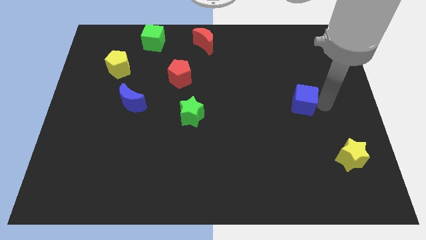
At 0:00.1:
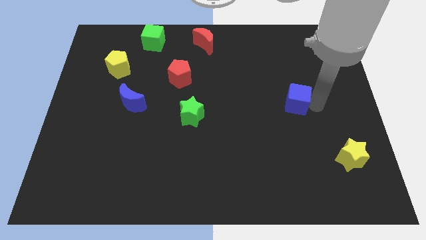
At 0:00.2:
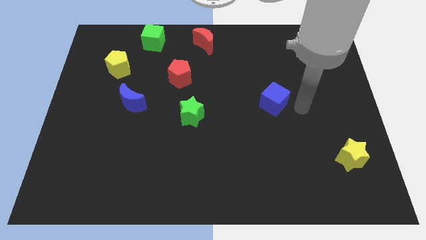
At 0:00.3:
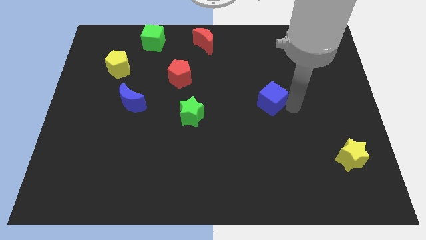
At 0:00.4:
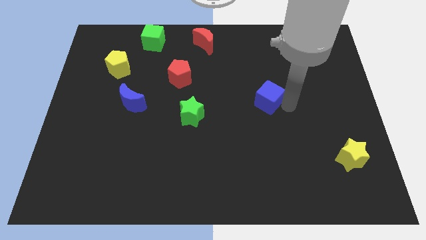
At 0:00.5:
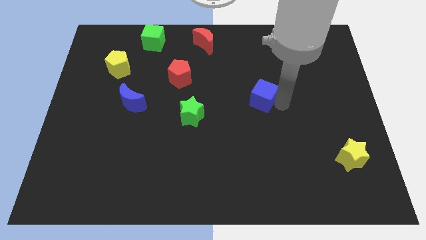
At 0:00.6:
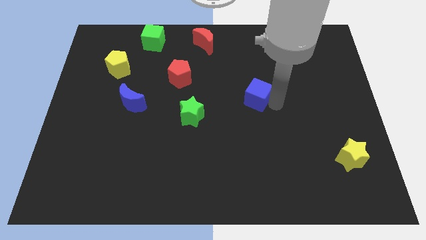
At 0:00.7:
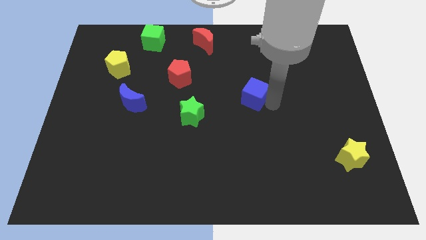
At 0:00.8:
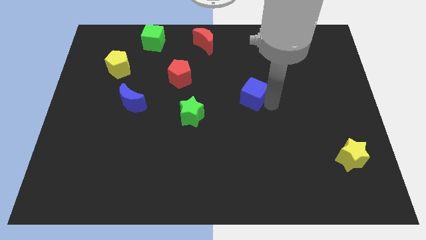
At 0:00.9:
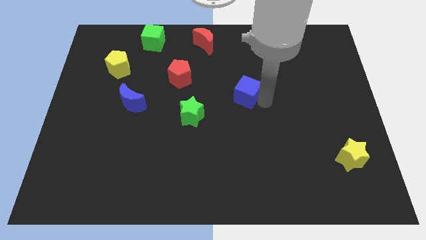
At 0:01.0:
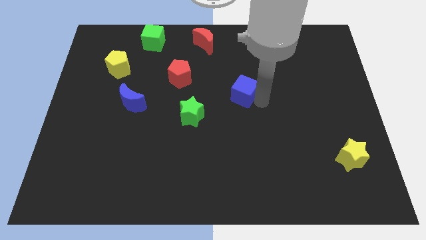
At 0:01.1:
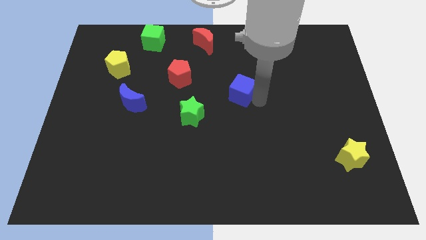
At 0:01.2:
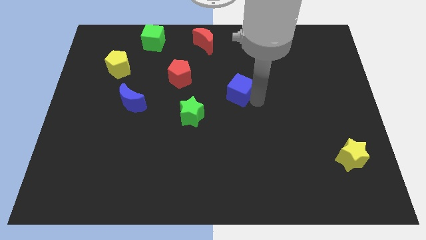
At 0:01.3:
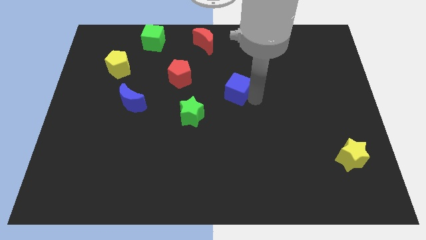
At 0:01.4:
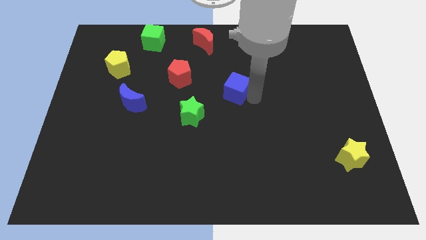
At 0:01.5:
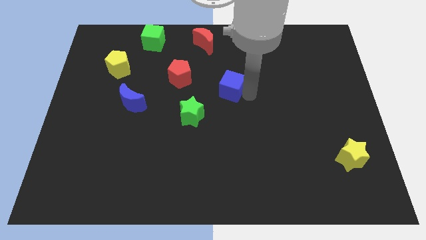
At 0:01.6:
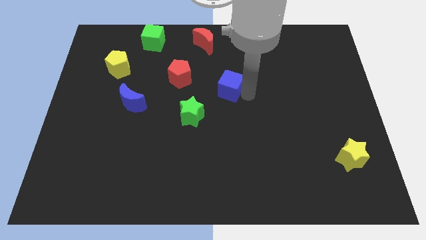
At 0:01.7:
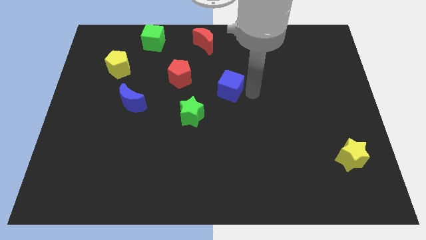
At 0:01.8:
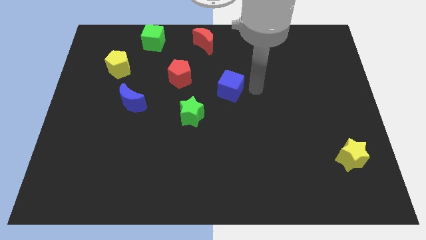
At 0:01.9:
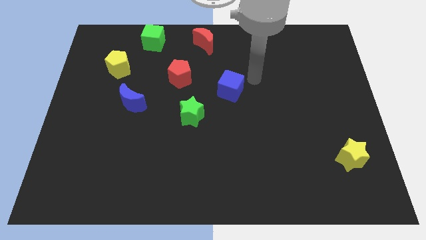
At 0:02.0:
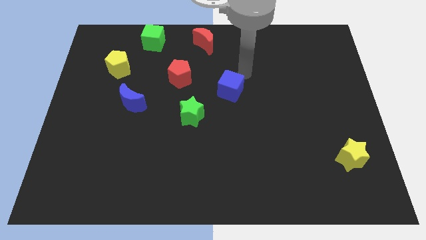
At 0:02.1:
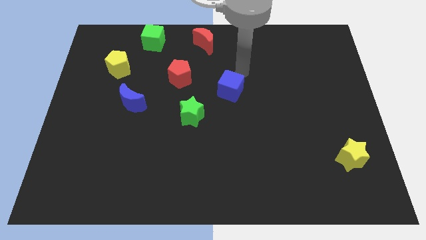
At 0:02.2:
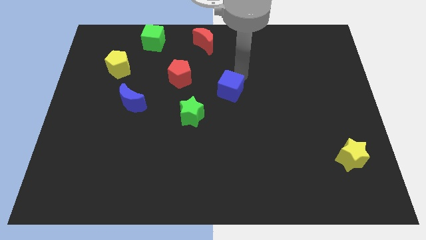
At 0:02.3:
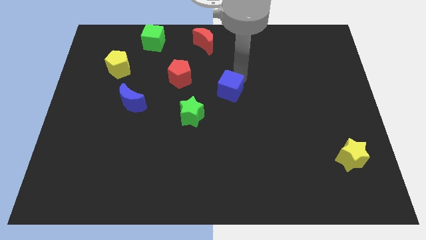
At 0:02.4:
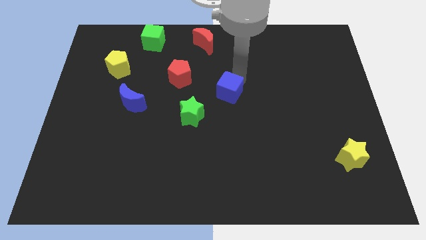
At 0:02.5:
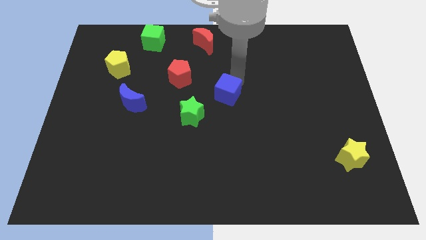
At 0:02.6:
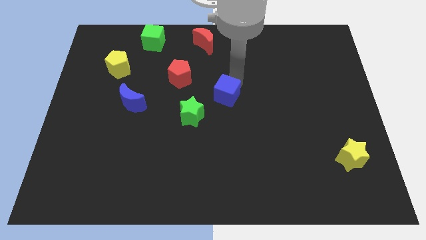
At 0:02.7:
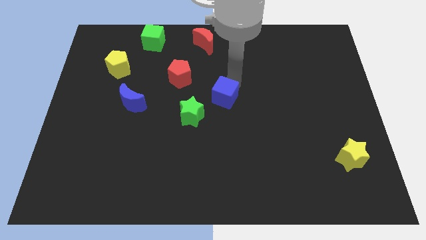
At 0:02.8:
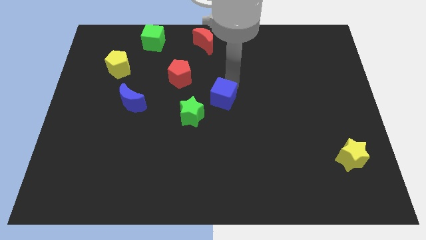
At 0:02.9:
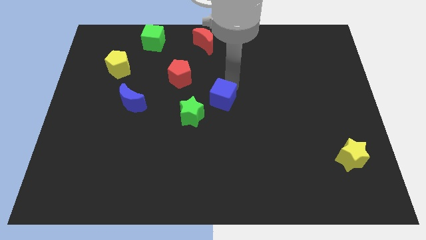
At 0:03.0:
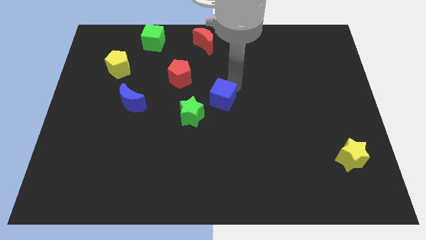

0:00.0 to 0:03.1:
place the blue cube parallel to the blue crescent

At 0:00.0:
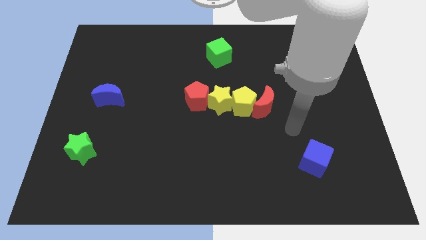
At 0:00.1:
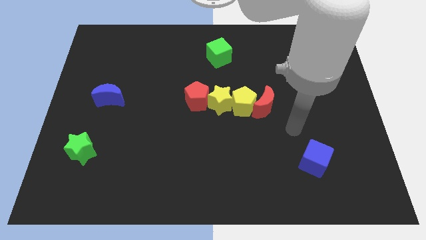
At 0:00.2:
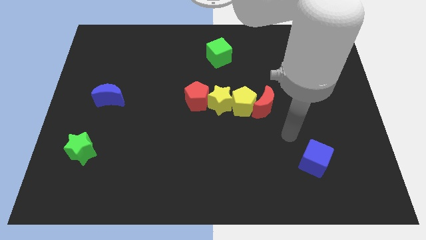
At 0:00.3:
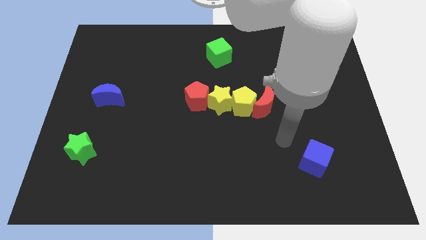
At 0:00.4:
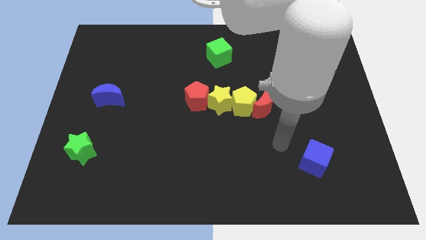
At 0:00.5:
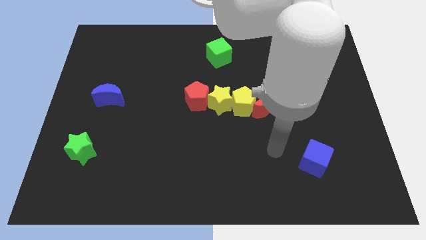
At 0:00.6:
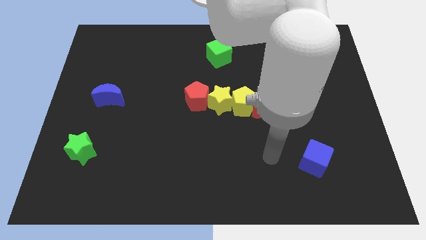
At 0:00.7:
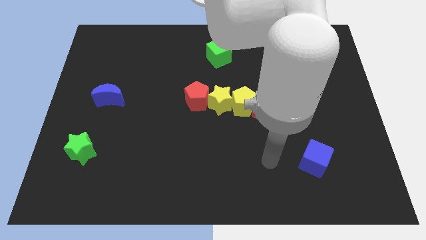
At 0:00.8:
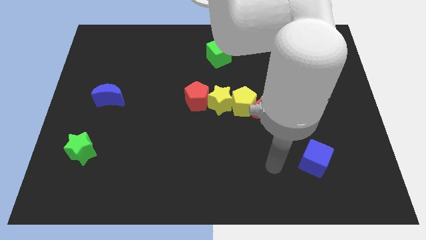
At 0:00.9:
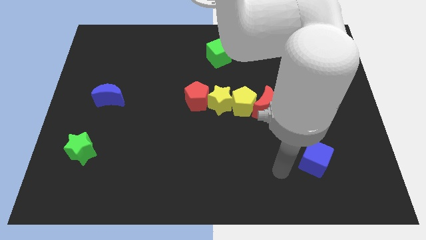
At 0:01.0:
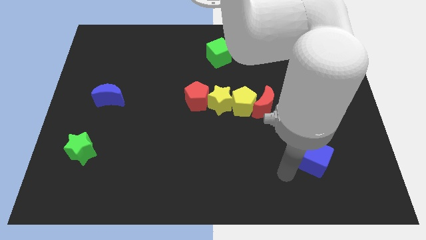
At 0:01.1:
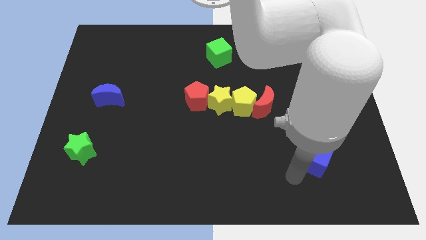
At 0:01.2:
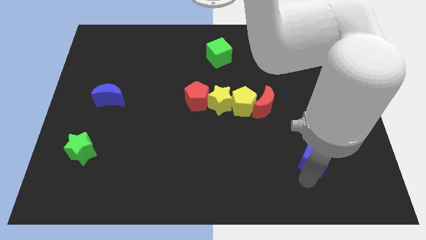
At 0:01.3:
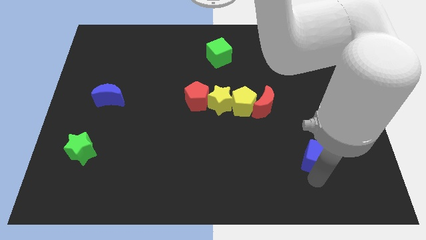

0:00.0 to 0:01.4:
move the arm into the blue cube

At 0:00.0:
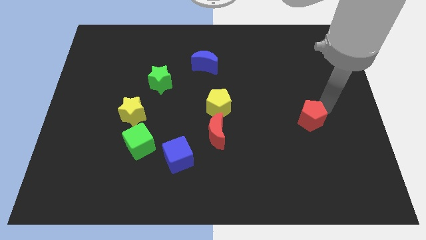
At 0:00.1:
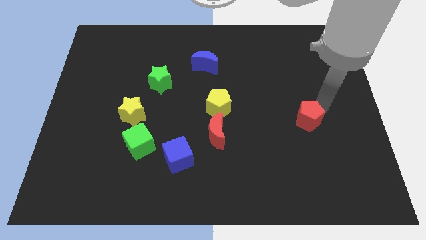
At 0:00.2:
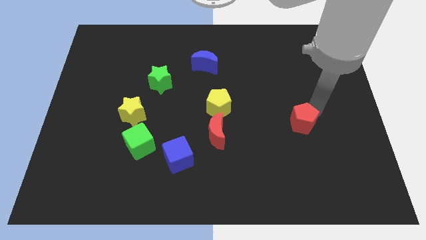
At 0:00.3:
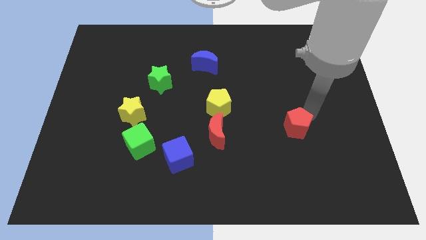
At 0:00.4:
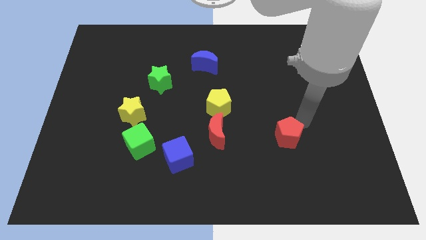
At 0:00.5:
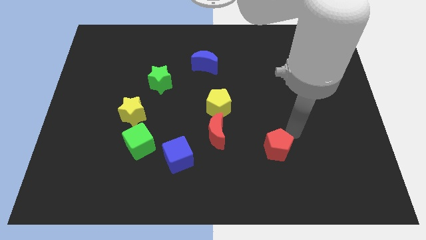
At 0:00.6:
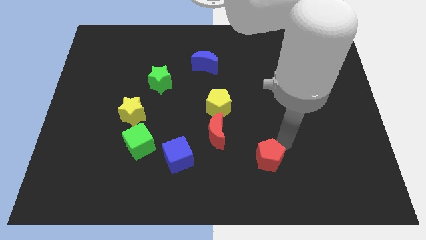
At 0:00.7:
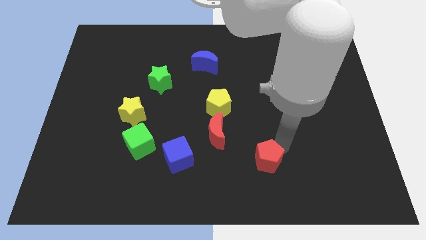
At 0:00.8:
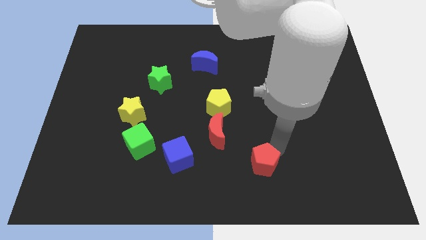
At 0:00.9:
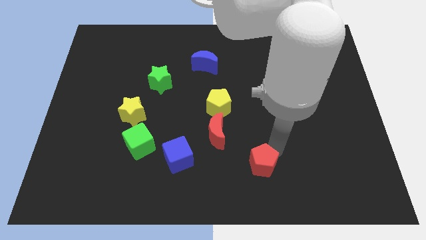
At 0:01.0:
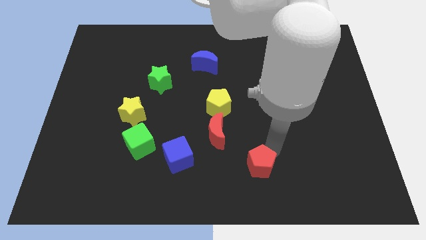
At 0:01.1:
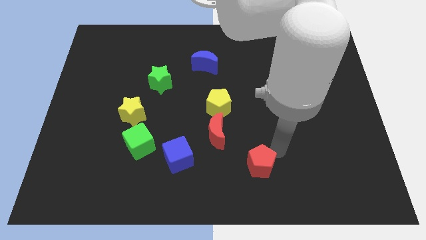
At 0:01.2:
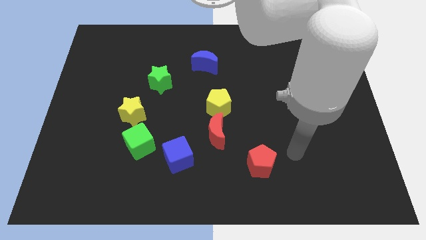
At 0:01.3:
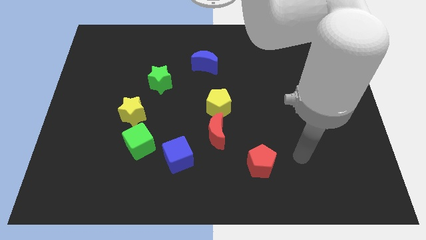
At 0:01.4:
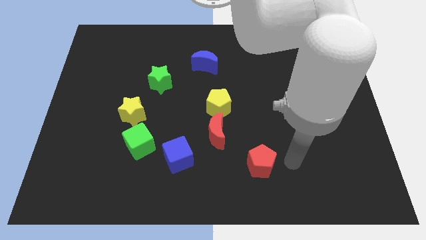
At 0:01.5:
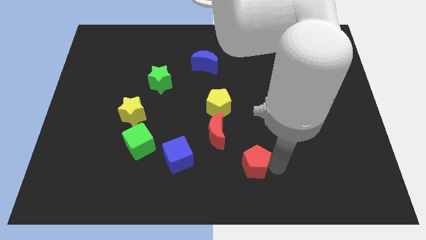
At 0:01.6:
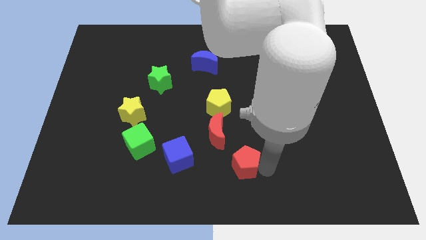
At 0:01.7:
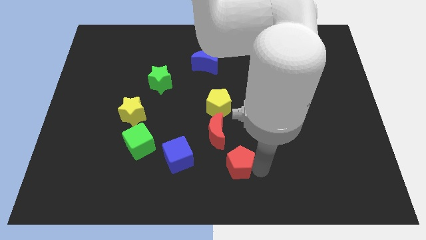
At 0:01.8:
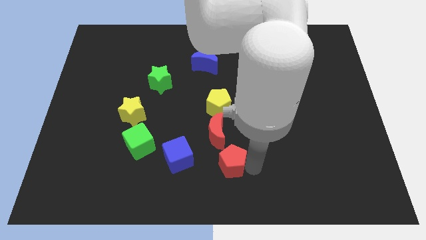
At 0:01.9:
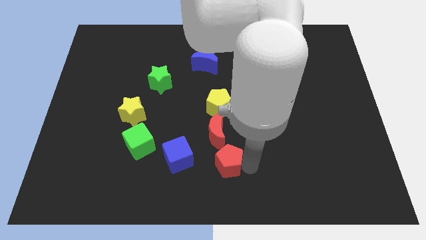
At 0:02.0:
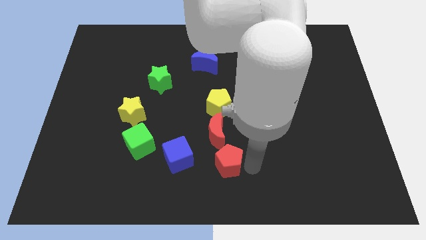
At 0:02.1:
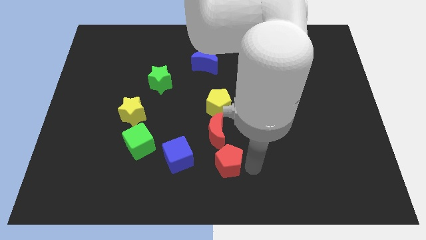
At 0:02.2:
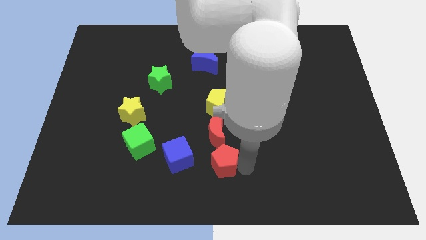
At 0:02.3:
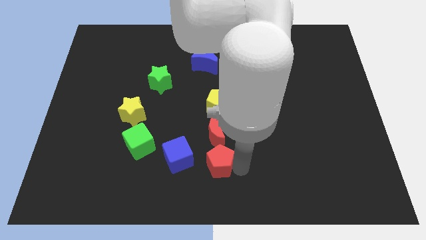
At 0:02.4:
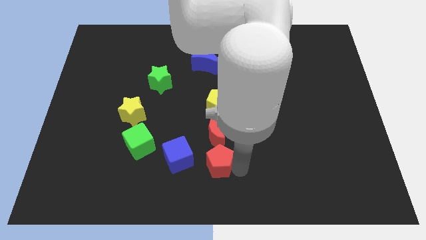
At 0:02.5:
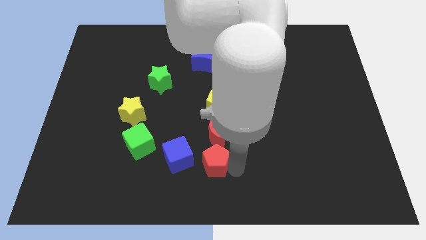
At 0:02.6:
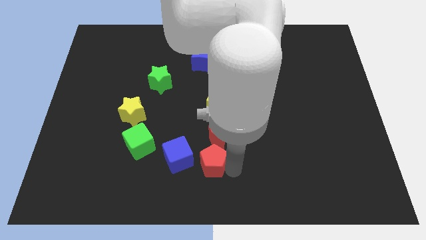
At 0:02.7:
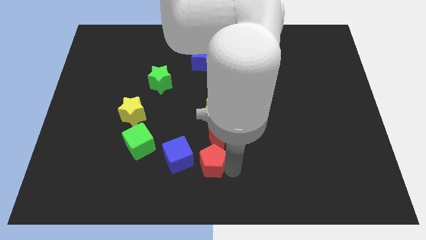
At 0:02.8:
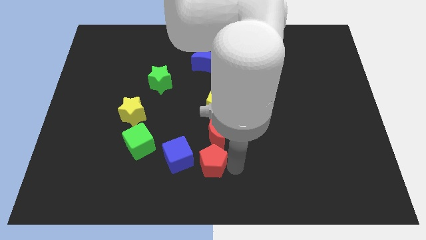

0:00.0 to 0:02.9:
push the red pentagon towards the blue cube

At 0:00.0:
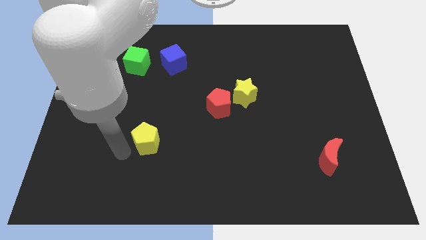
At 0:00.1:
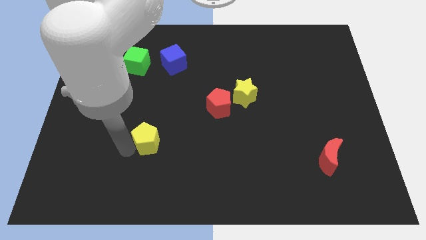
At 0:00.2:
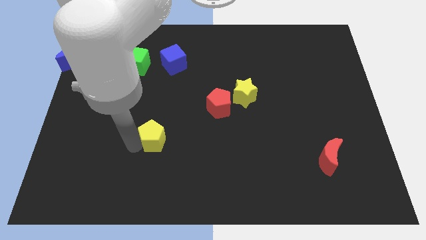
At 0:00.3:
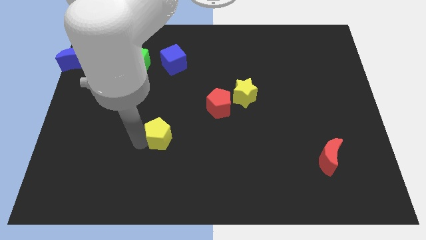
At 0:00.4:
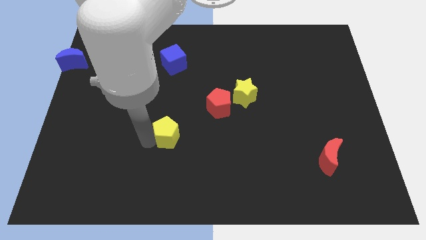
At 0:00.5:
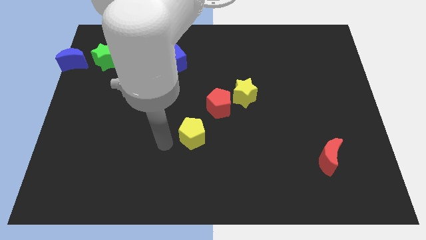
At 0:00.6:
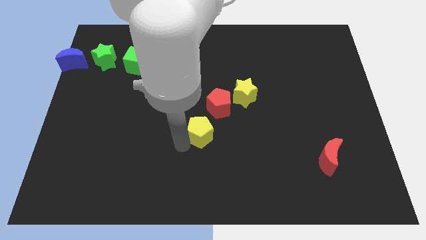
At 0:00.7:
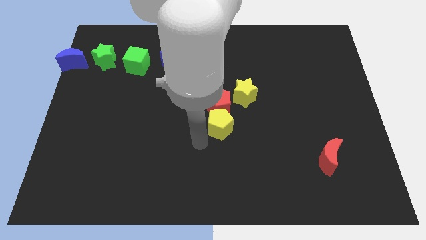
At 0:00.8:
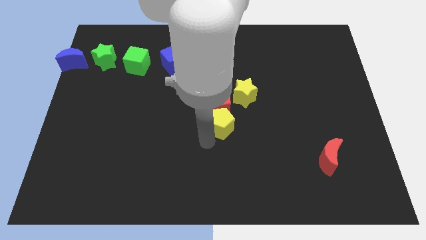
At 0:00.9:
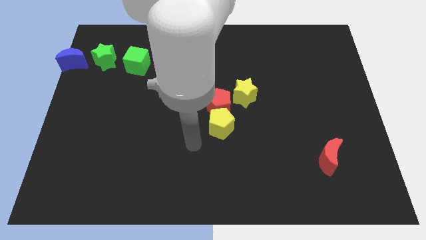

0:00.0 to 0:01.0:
put the yellow pentagon below the red pentagon

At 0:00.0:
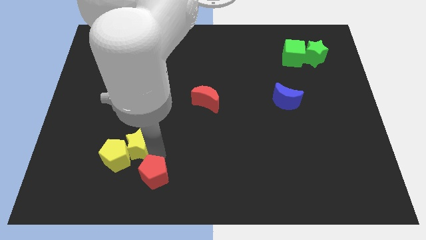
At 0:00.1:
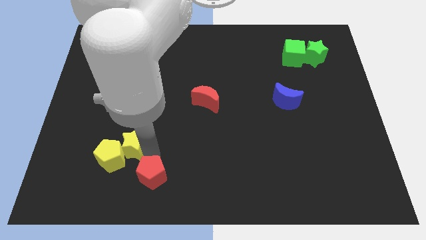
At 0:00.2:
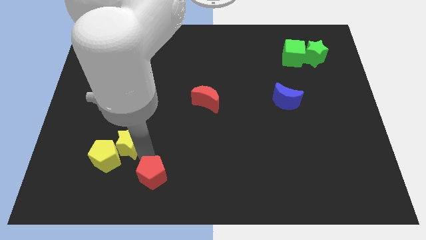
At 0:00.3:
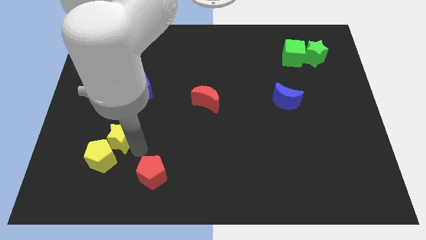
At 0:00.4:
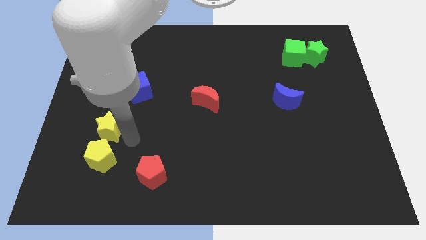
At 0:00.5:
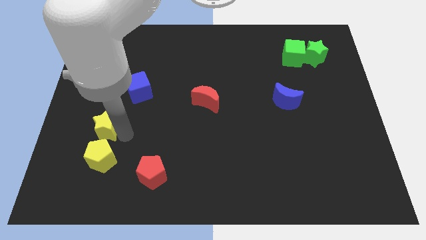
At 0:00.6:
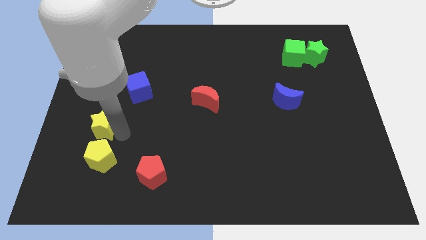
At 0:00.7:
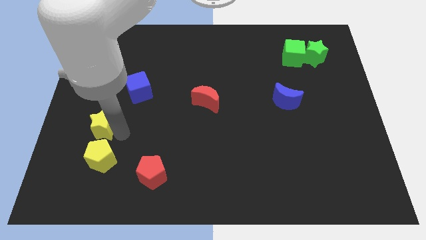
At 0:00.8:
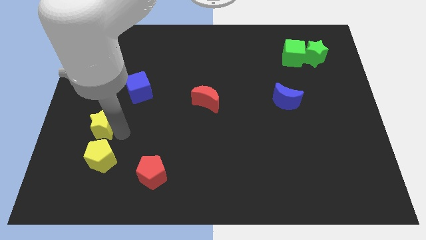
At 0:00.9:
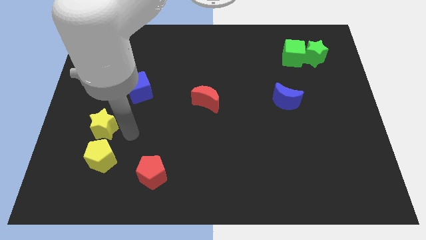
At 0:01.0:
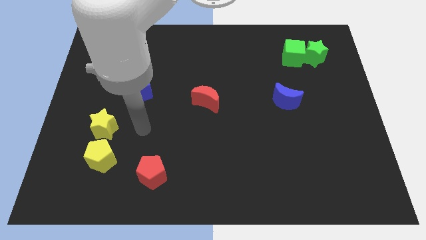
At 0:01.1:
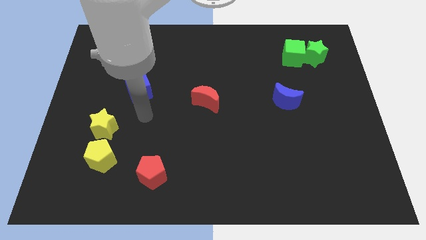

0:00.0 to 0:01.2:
move the yellow star away from the red pentagon
